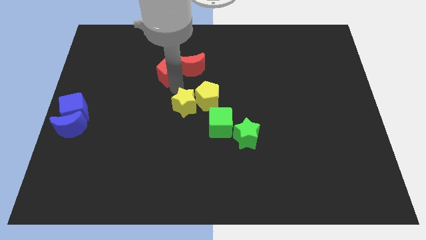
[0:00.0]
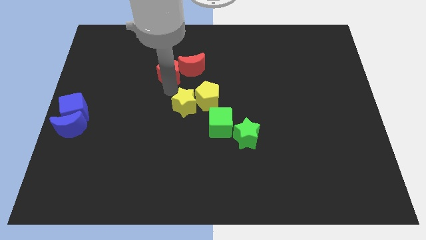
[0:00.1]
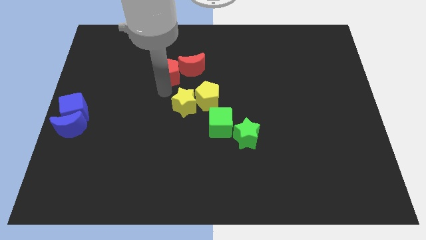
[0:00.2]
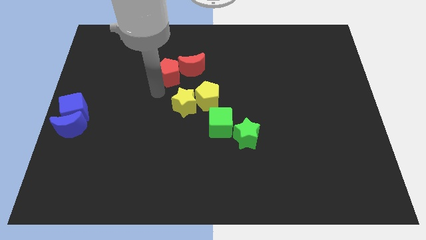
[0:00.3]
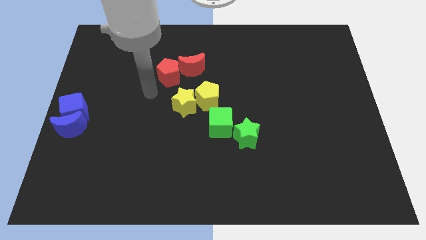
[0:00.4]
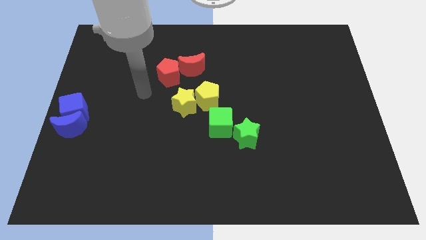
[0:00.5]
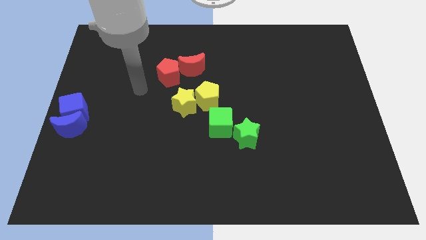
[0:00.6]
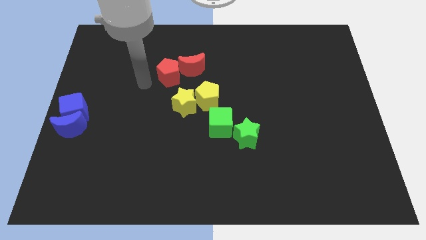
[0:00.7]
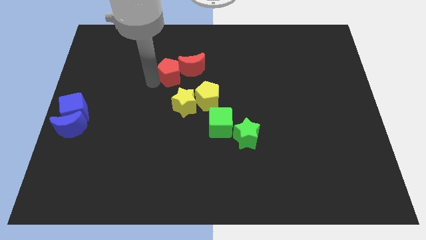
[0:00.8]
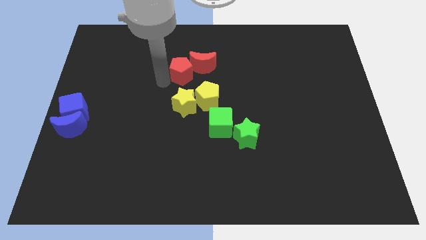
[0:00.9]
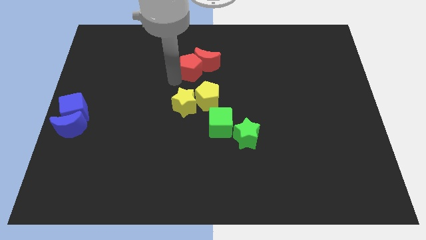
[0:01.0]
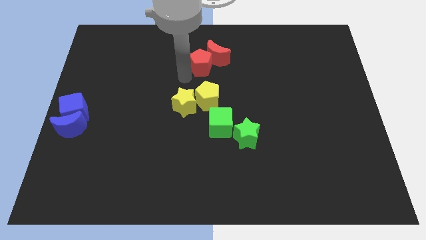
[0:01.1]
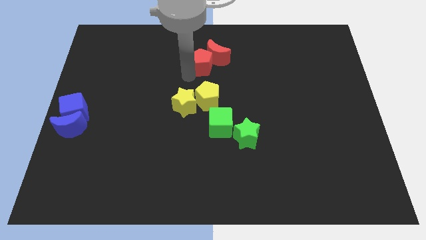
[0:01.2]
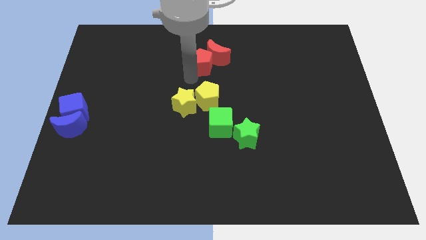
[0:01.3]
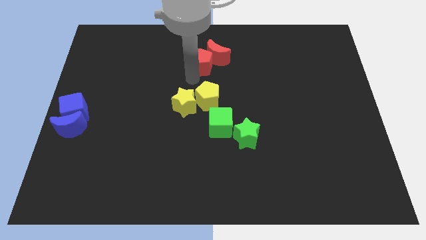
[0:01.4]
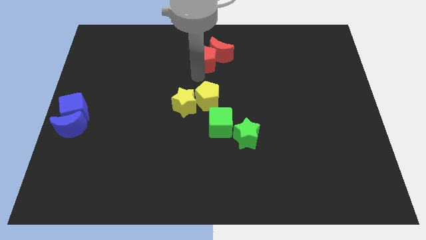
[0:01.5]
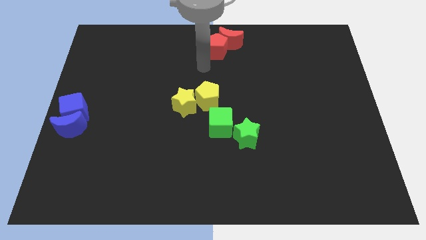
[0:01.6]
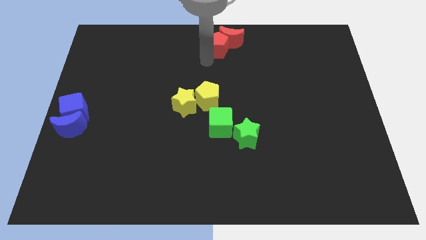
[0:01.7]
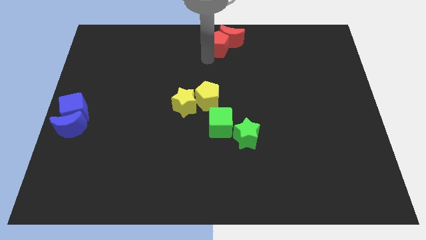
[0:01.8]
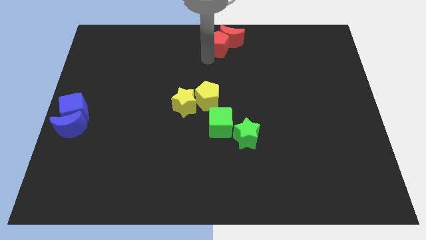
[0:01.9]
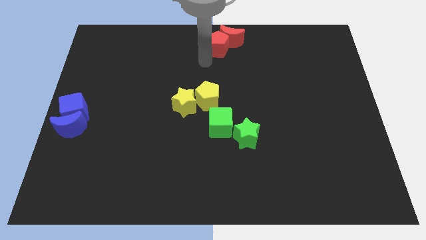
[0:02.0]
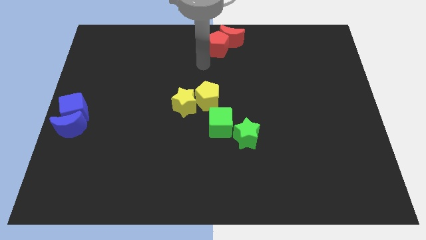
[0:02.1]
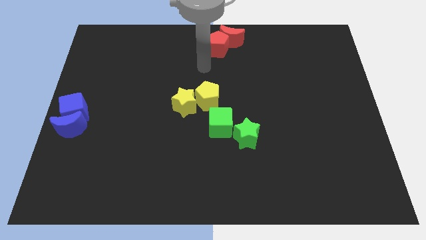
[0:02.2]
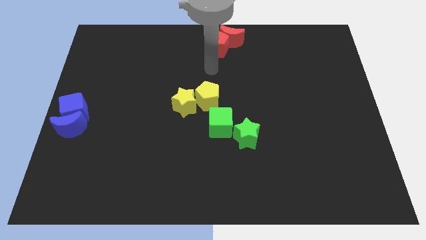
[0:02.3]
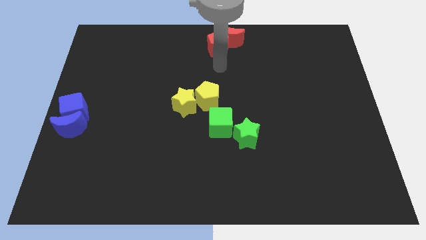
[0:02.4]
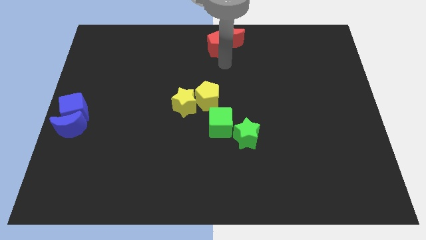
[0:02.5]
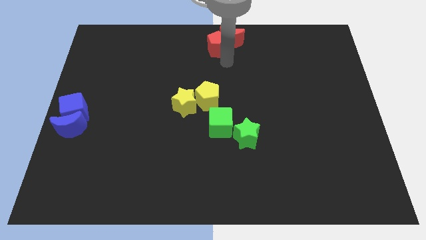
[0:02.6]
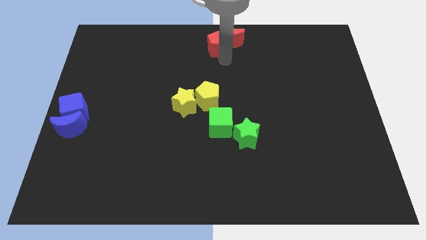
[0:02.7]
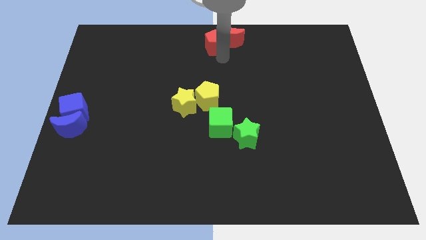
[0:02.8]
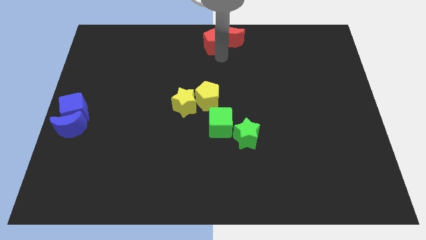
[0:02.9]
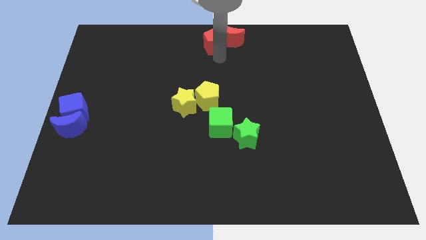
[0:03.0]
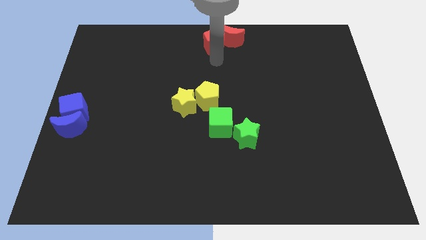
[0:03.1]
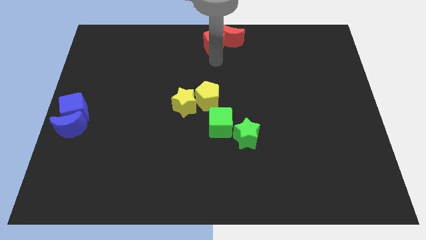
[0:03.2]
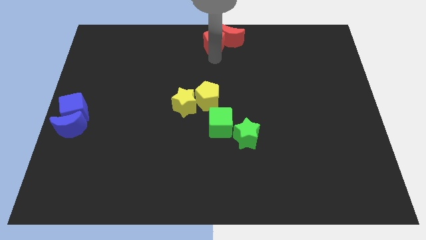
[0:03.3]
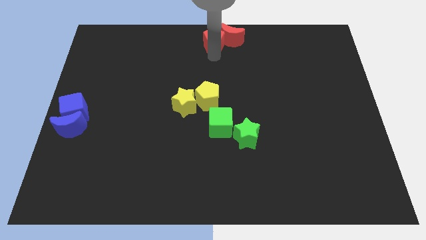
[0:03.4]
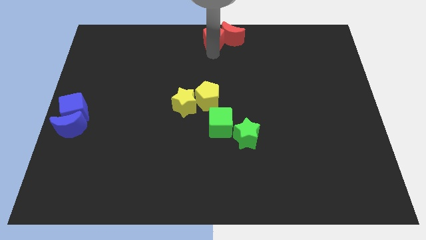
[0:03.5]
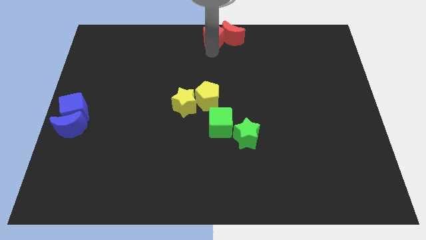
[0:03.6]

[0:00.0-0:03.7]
push the red pentagon along with the red moon to the top center of the board

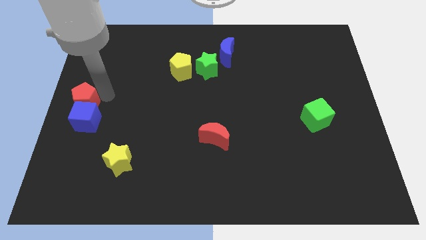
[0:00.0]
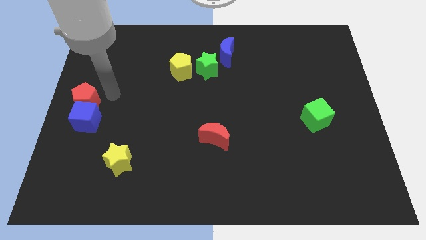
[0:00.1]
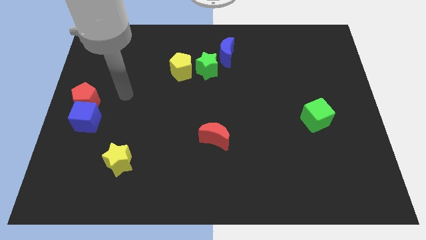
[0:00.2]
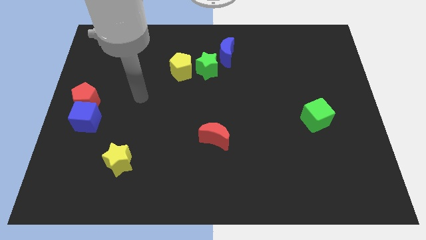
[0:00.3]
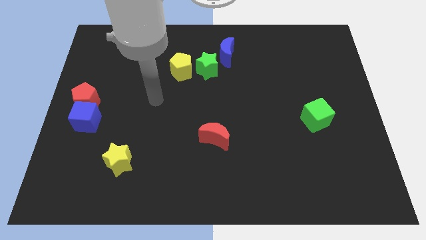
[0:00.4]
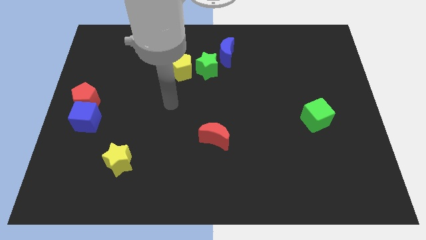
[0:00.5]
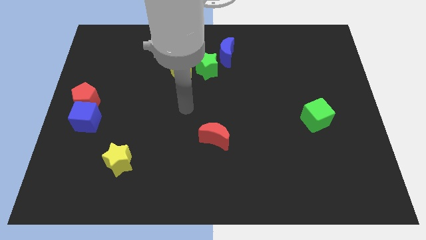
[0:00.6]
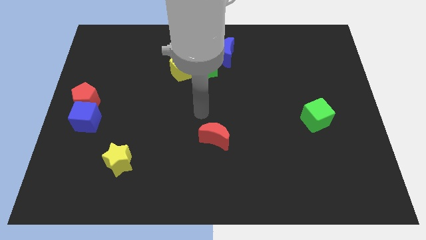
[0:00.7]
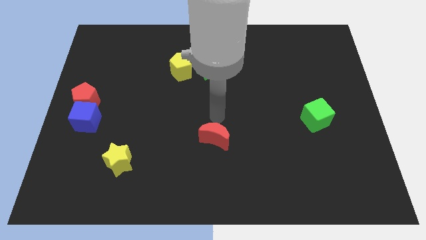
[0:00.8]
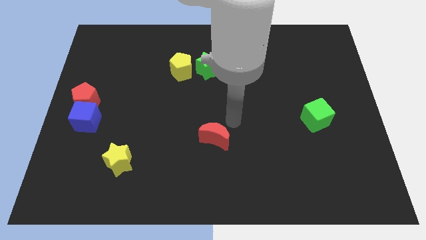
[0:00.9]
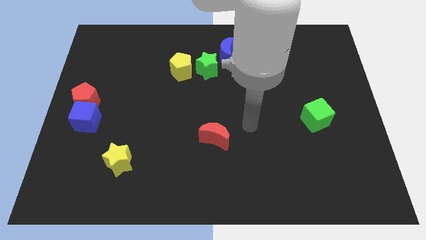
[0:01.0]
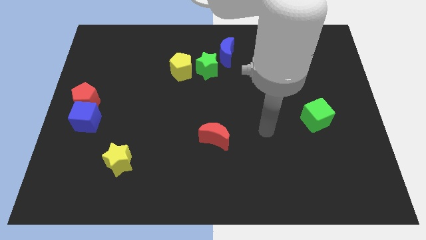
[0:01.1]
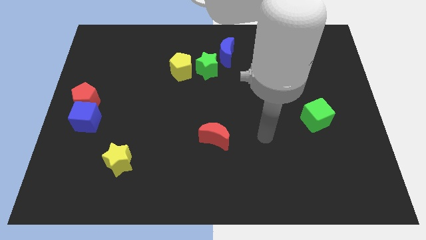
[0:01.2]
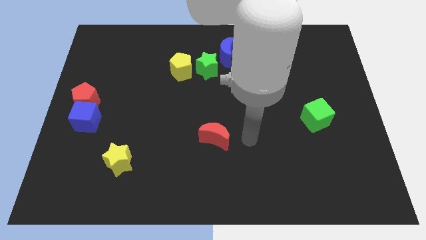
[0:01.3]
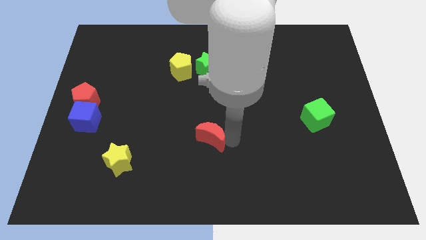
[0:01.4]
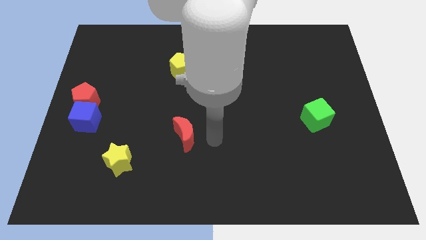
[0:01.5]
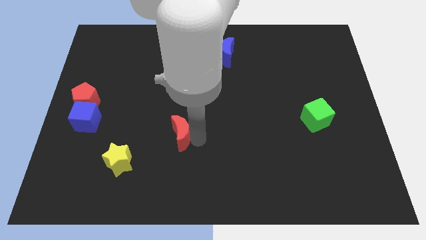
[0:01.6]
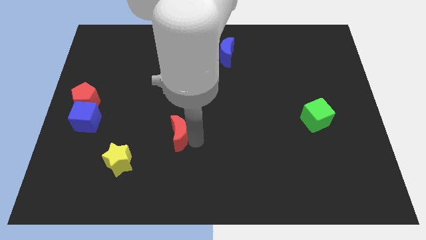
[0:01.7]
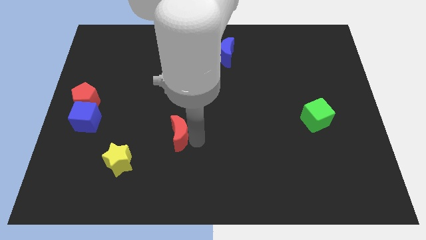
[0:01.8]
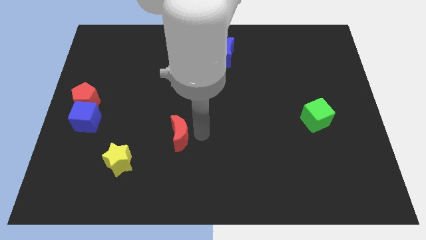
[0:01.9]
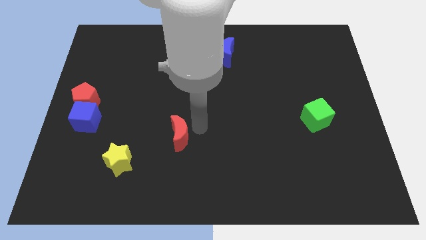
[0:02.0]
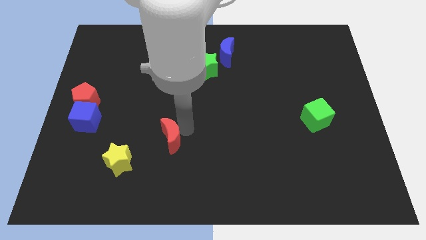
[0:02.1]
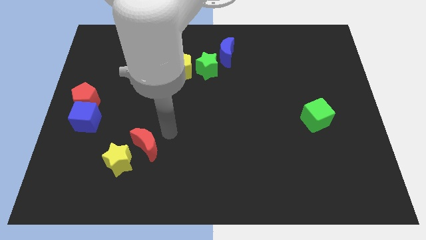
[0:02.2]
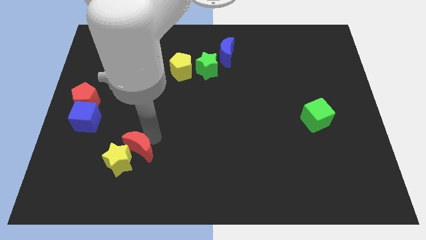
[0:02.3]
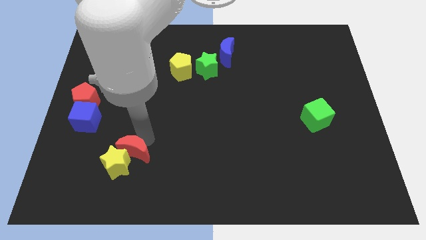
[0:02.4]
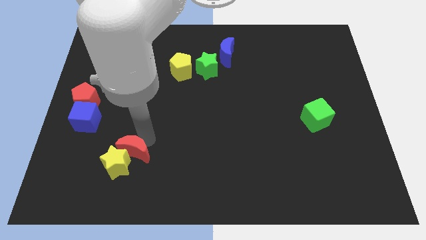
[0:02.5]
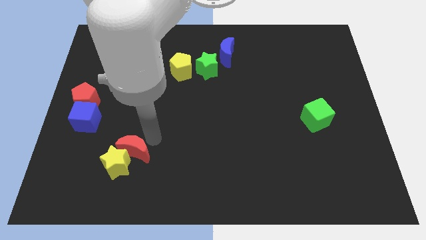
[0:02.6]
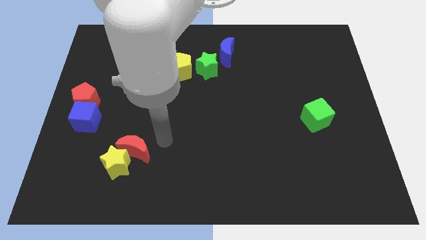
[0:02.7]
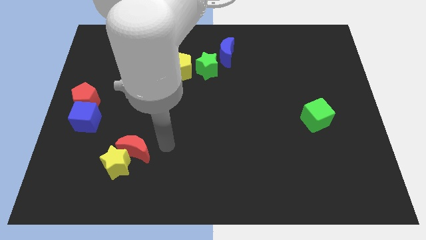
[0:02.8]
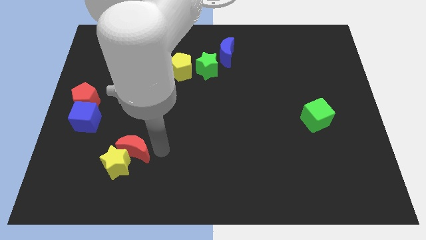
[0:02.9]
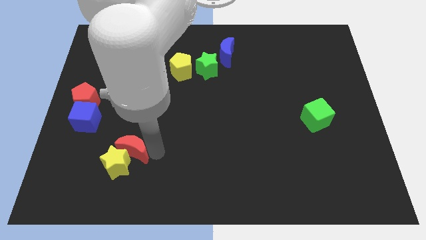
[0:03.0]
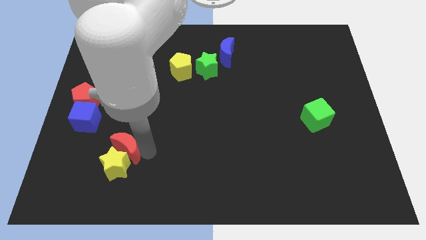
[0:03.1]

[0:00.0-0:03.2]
push the red crescent into yellow star

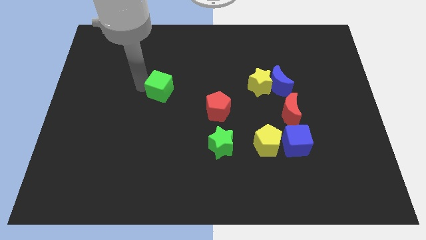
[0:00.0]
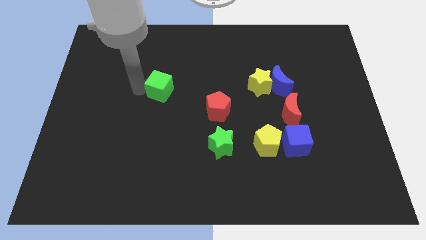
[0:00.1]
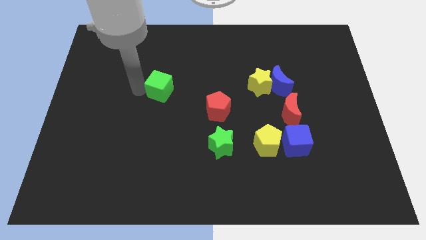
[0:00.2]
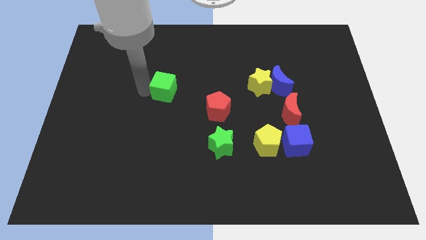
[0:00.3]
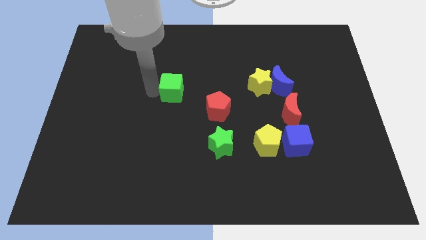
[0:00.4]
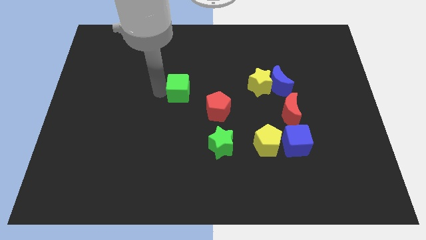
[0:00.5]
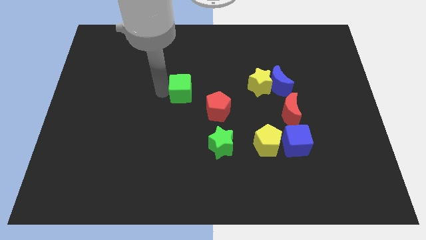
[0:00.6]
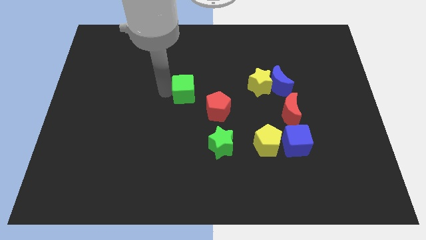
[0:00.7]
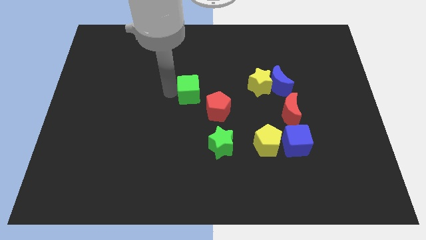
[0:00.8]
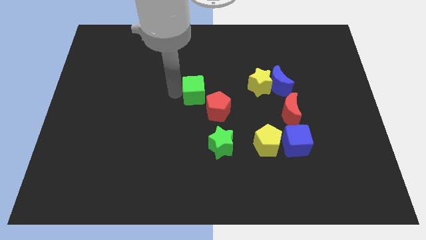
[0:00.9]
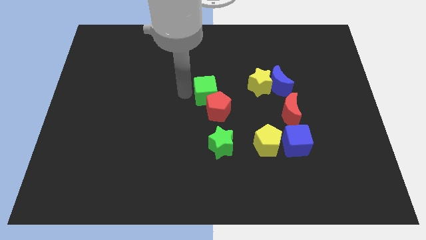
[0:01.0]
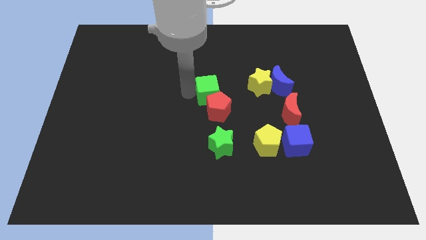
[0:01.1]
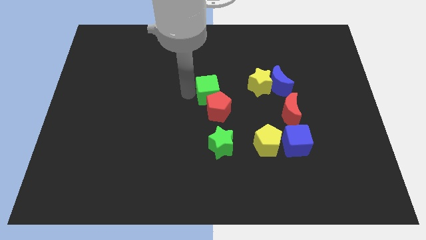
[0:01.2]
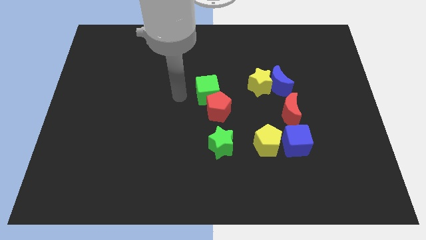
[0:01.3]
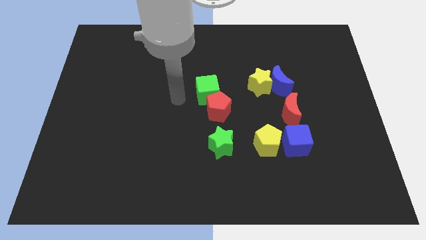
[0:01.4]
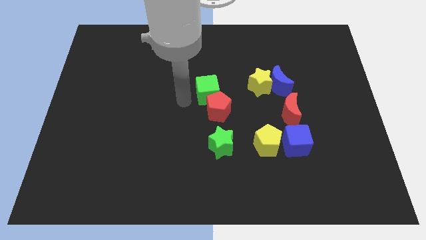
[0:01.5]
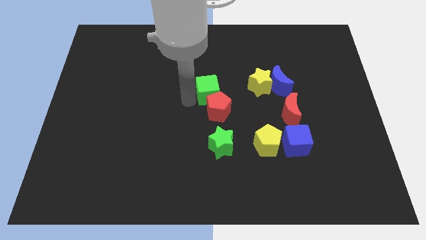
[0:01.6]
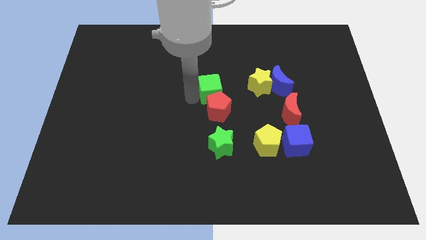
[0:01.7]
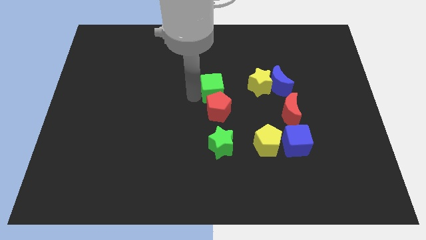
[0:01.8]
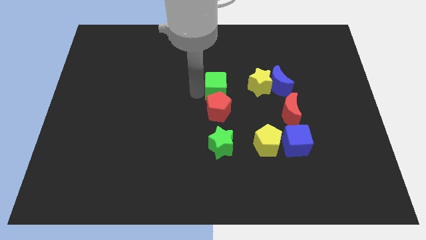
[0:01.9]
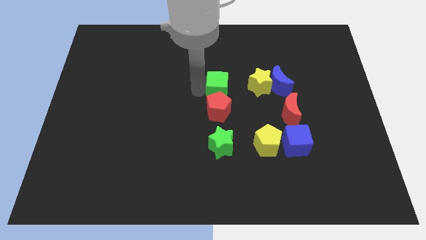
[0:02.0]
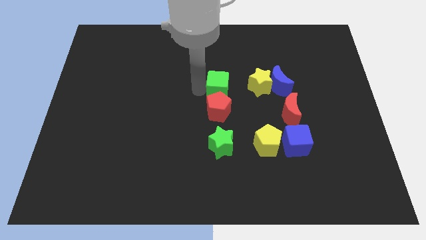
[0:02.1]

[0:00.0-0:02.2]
place the green cube above the red pentagon
